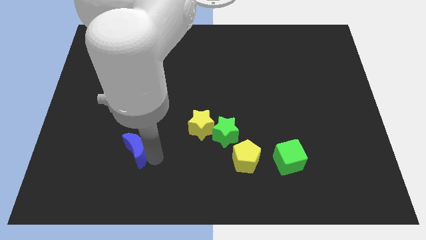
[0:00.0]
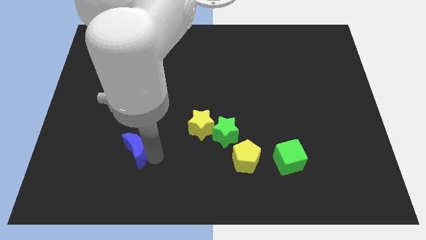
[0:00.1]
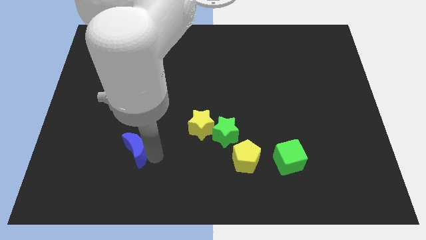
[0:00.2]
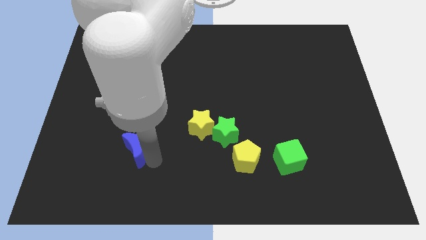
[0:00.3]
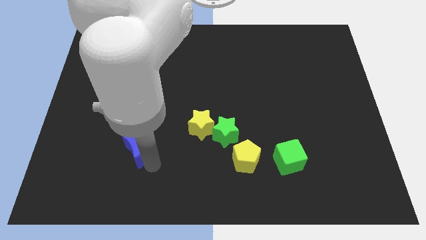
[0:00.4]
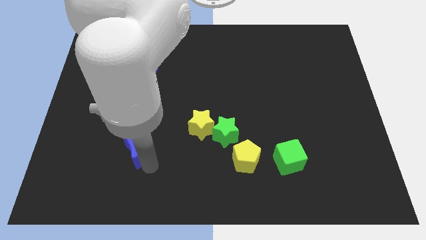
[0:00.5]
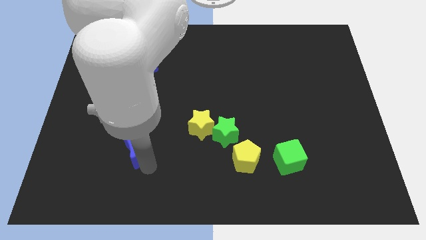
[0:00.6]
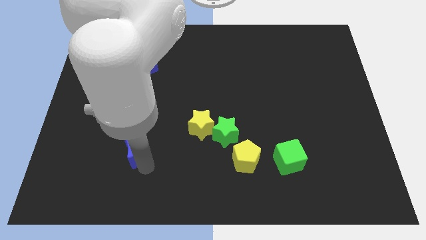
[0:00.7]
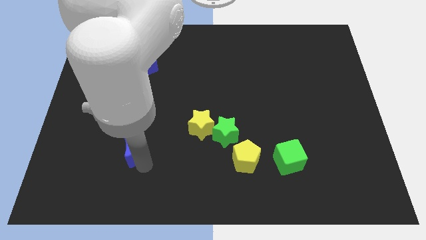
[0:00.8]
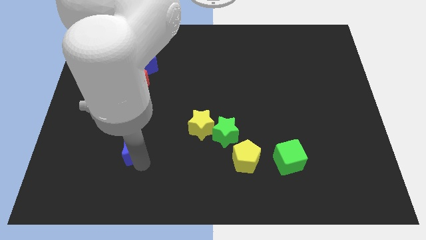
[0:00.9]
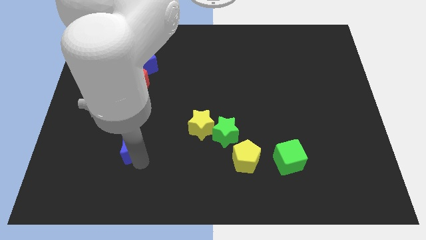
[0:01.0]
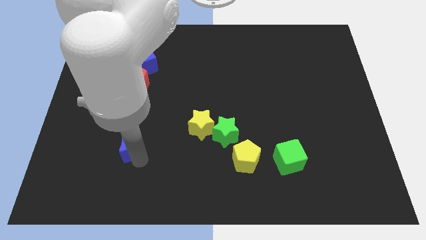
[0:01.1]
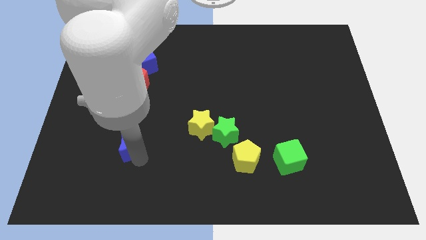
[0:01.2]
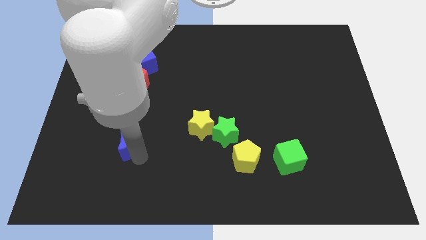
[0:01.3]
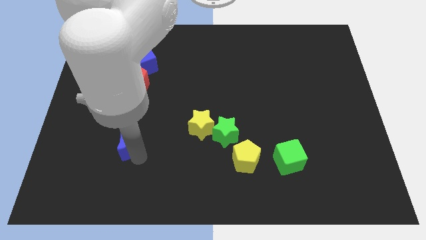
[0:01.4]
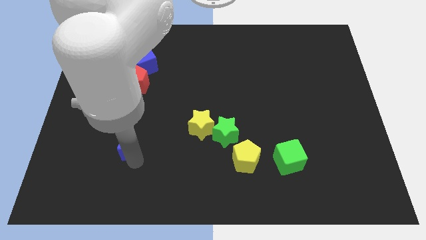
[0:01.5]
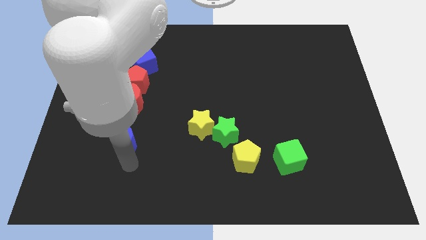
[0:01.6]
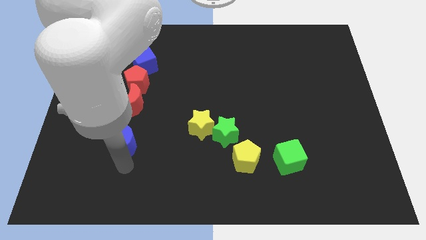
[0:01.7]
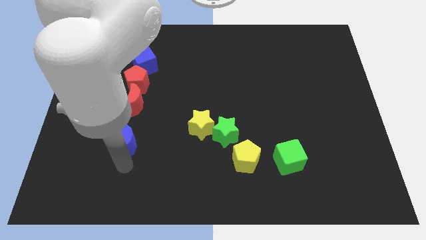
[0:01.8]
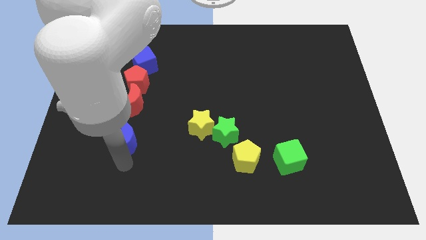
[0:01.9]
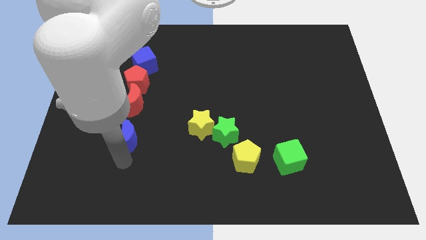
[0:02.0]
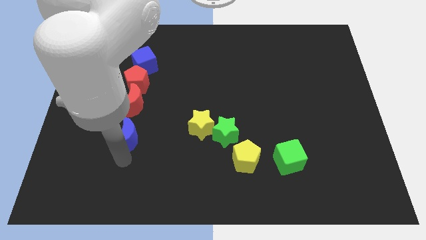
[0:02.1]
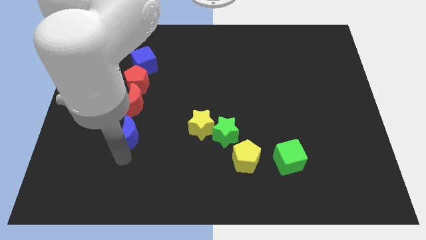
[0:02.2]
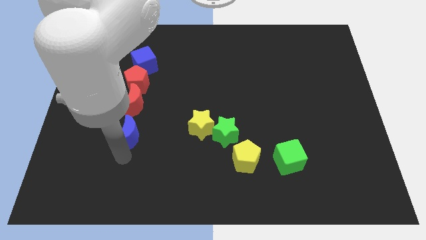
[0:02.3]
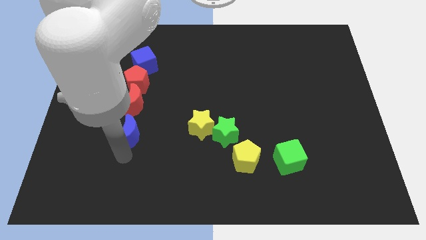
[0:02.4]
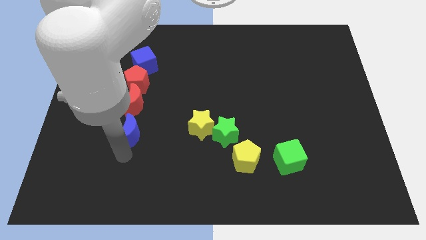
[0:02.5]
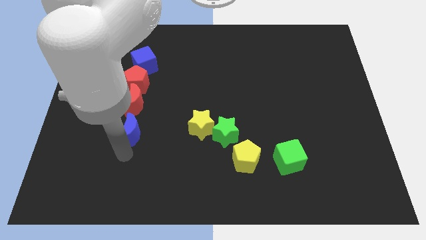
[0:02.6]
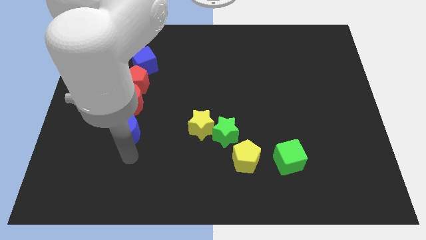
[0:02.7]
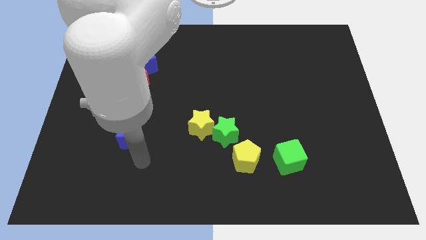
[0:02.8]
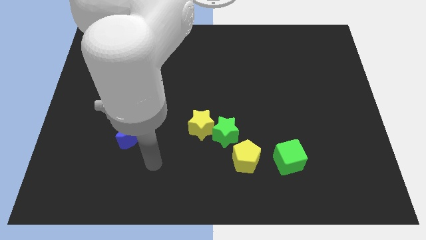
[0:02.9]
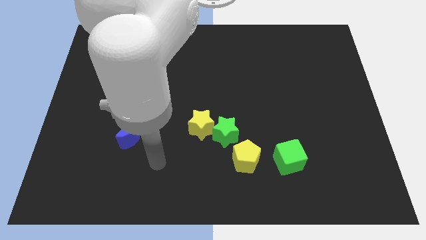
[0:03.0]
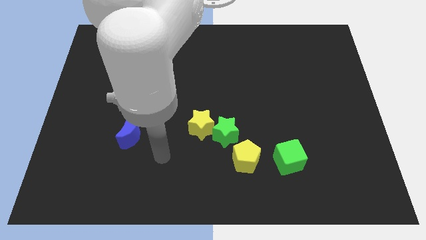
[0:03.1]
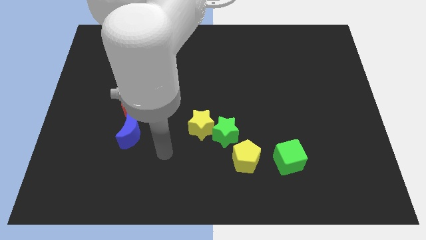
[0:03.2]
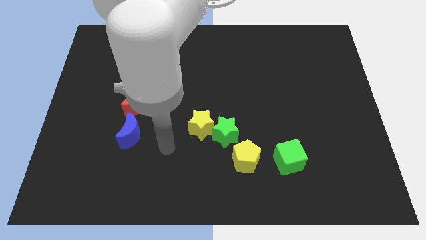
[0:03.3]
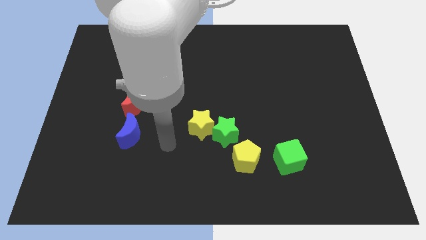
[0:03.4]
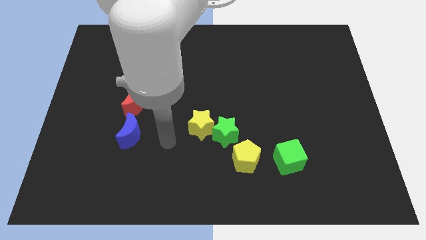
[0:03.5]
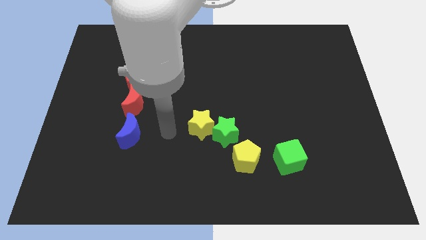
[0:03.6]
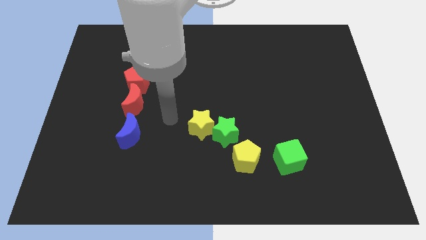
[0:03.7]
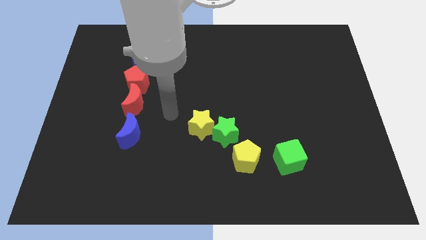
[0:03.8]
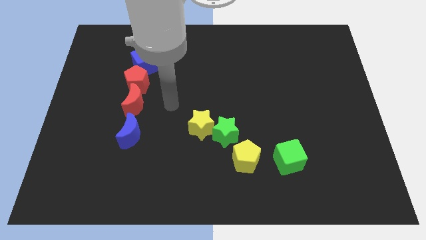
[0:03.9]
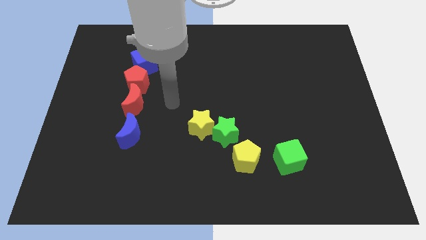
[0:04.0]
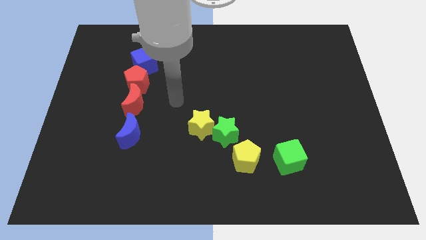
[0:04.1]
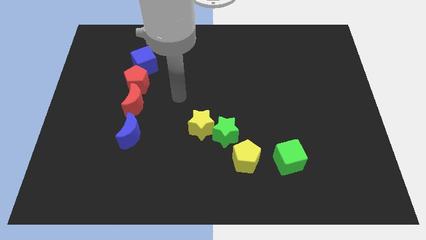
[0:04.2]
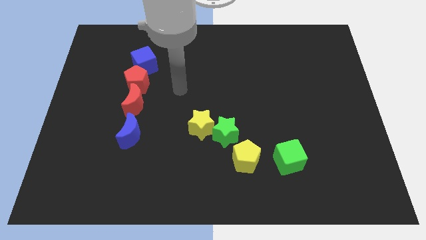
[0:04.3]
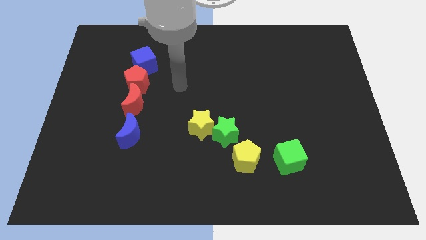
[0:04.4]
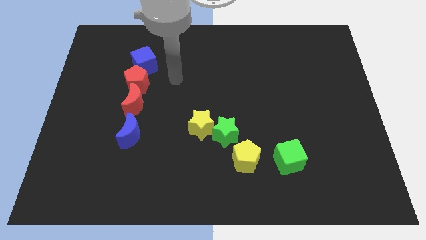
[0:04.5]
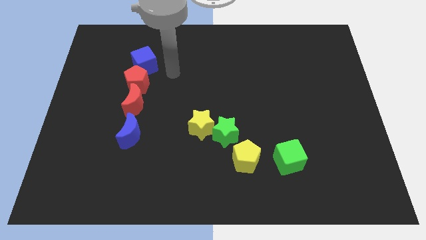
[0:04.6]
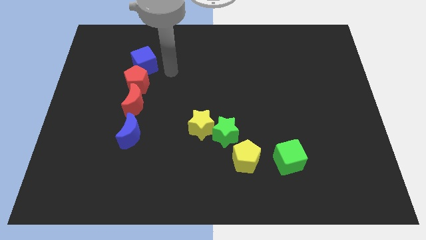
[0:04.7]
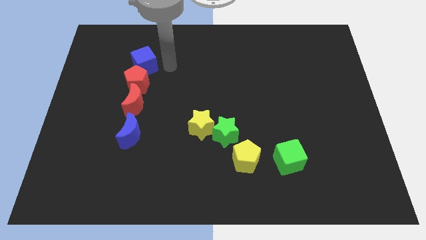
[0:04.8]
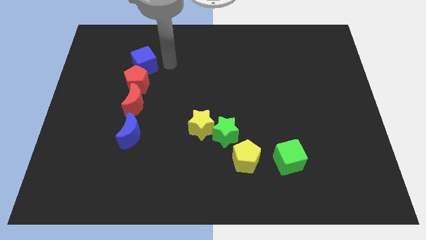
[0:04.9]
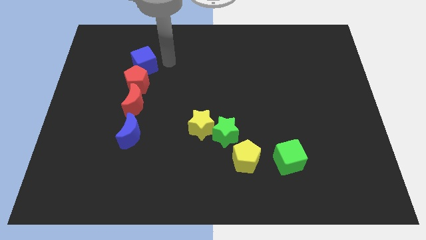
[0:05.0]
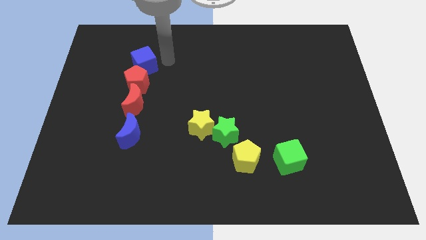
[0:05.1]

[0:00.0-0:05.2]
move the blue crescent below the red crescent

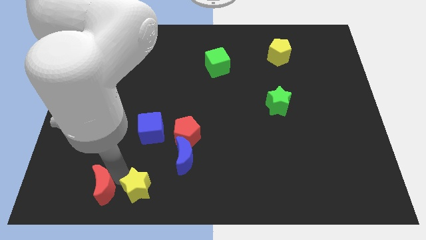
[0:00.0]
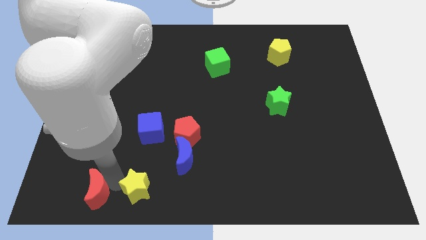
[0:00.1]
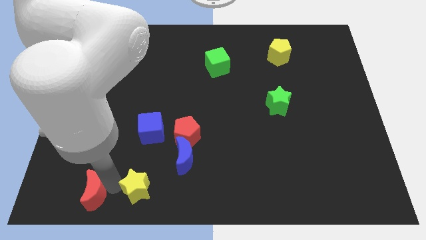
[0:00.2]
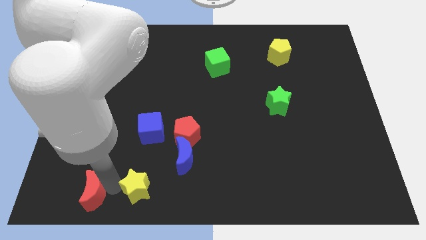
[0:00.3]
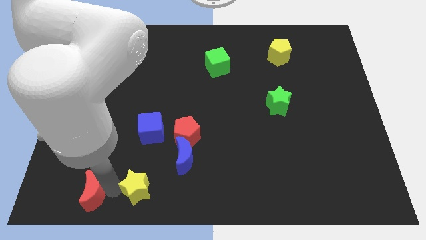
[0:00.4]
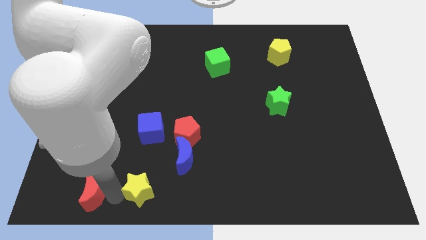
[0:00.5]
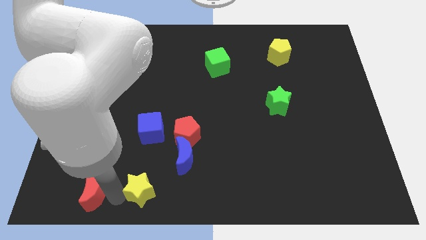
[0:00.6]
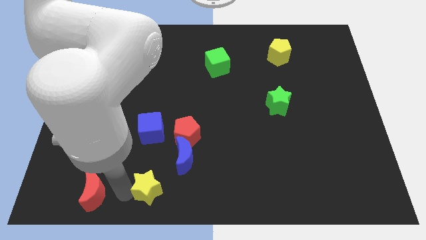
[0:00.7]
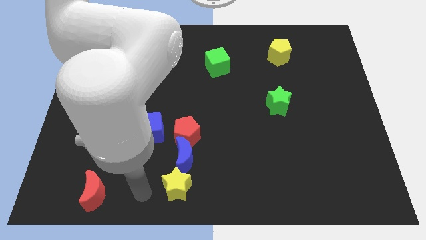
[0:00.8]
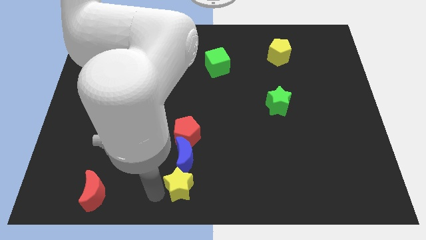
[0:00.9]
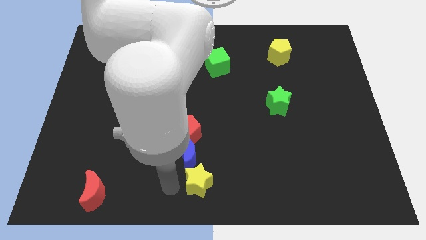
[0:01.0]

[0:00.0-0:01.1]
separate yellow star and red crescent

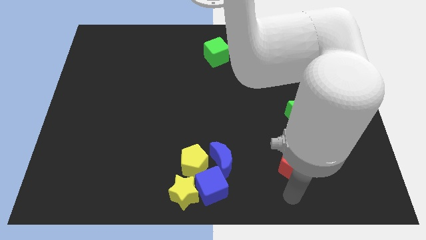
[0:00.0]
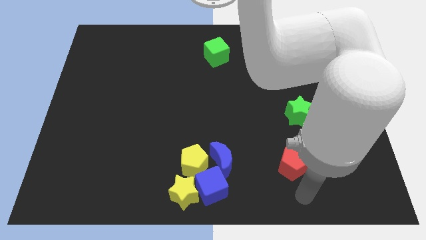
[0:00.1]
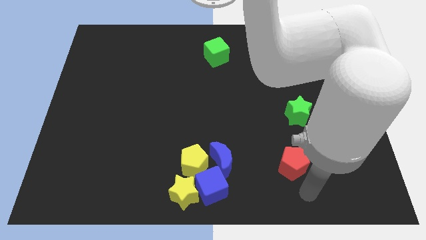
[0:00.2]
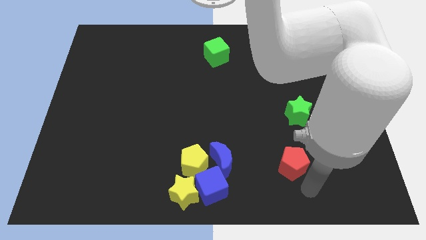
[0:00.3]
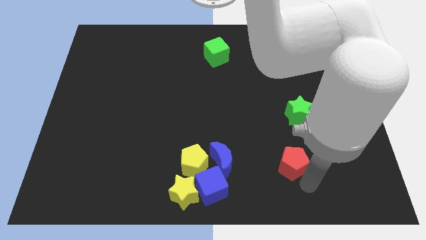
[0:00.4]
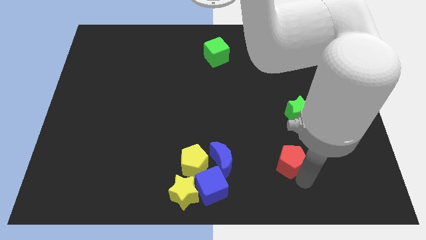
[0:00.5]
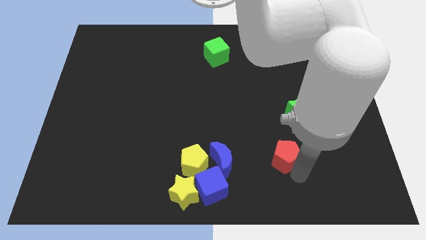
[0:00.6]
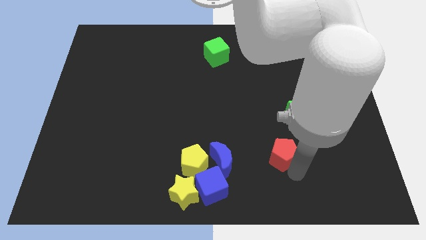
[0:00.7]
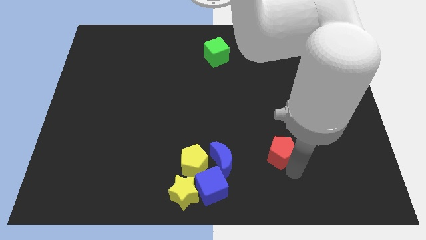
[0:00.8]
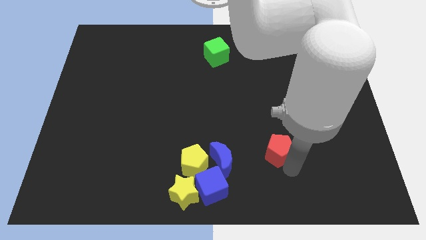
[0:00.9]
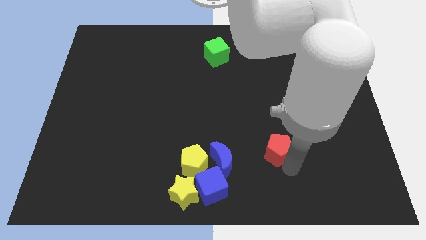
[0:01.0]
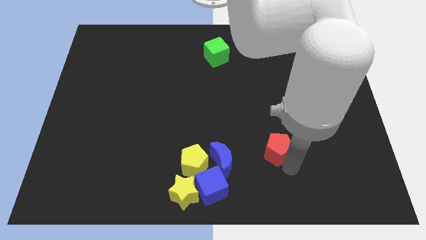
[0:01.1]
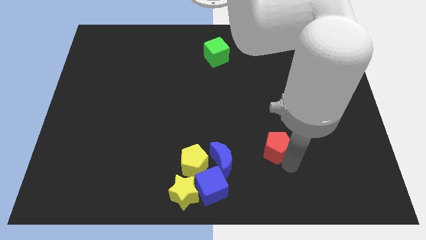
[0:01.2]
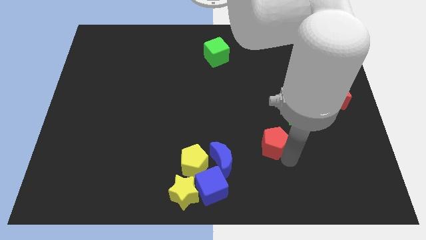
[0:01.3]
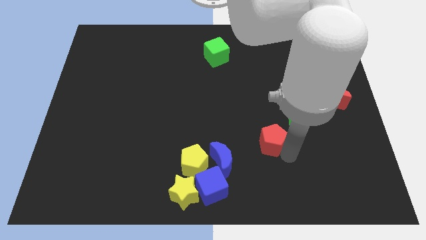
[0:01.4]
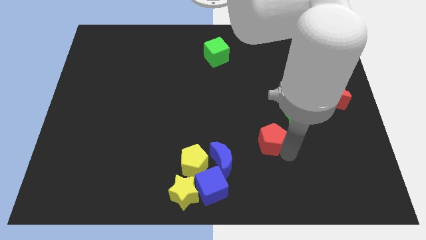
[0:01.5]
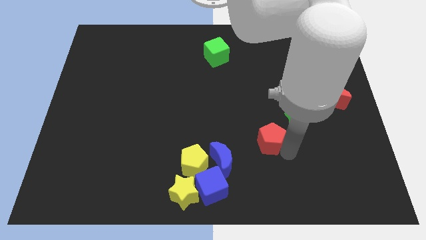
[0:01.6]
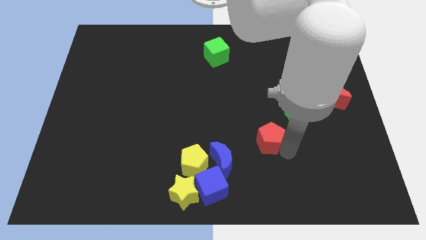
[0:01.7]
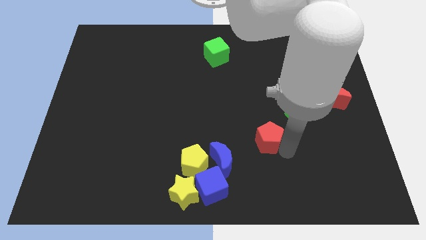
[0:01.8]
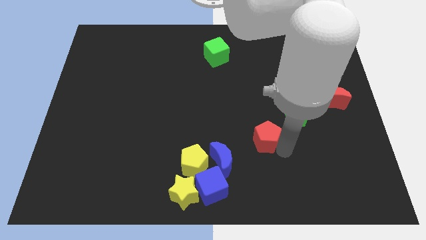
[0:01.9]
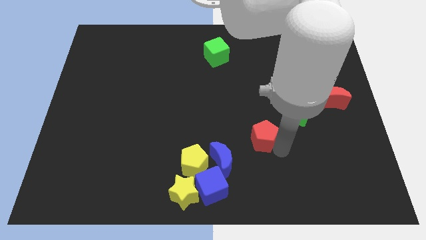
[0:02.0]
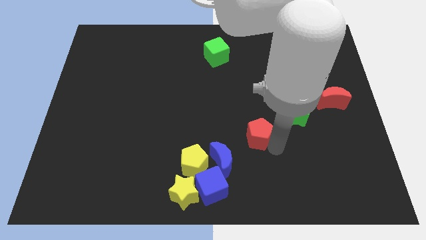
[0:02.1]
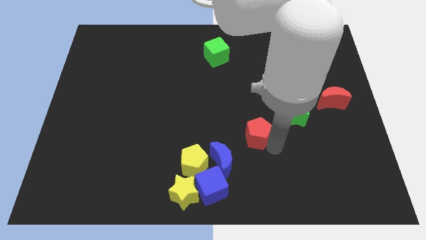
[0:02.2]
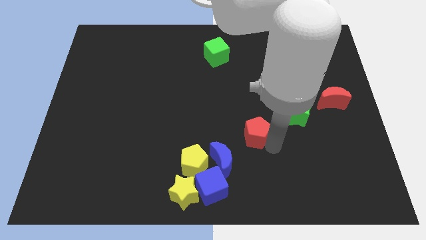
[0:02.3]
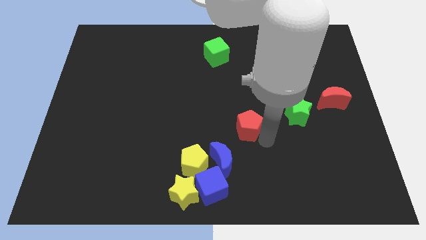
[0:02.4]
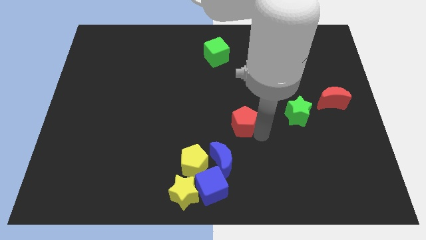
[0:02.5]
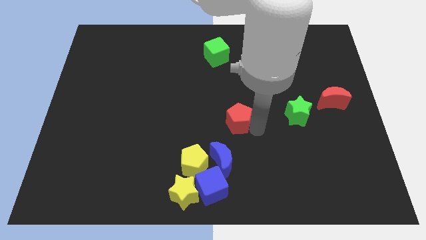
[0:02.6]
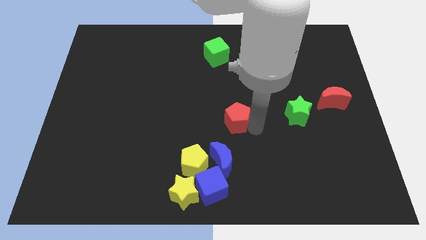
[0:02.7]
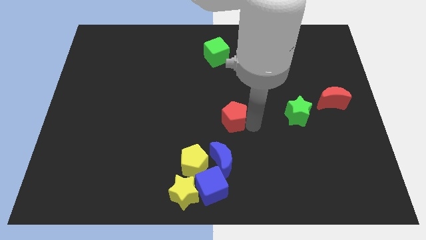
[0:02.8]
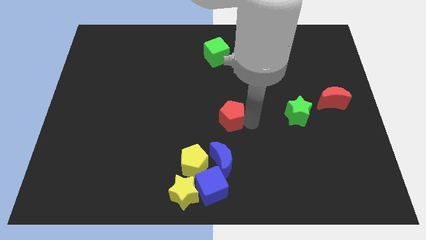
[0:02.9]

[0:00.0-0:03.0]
push the red pentagon towards the center of the board
